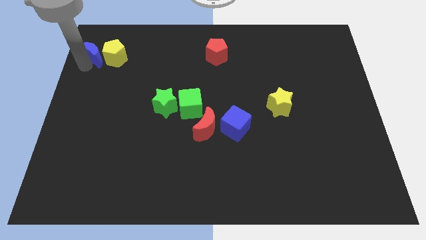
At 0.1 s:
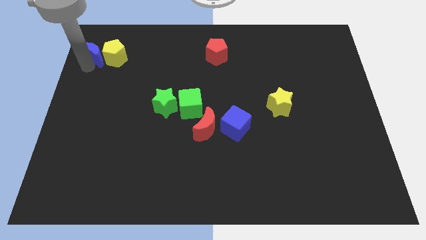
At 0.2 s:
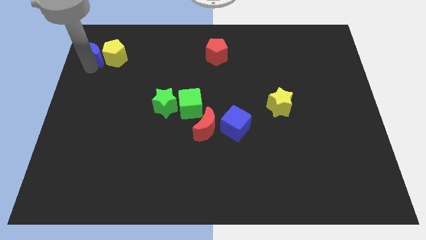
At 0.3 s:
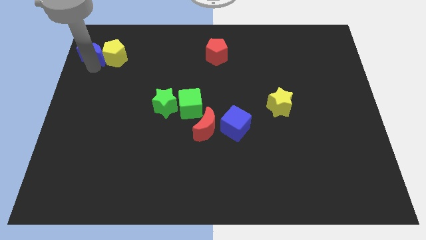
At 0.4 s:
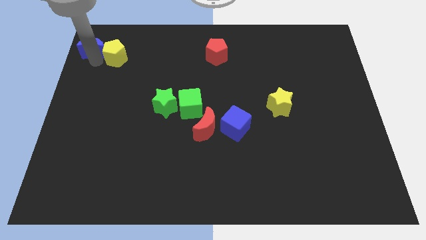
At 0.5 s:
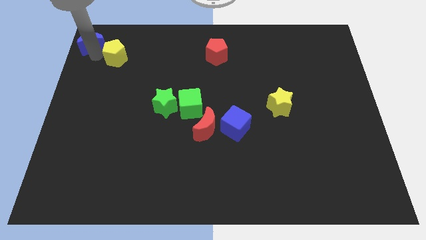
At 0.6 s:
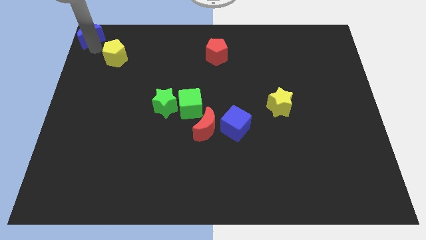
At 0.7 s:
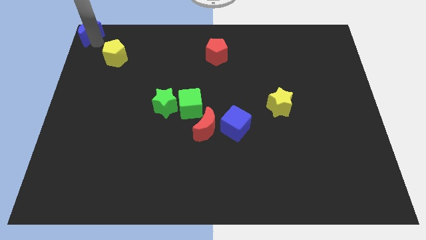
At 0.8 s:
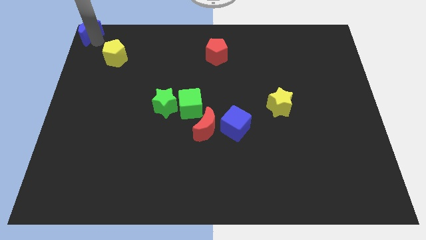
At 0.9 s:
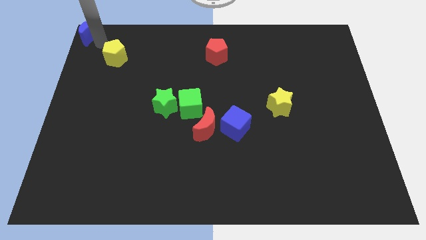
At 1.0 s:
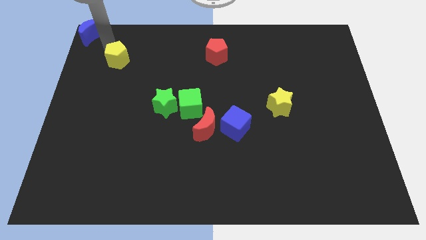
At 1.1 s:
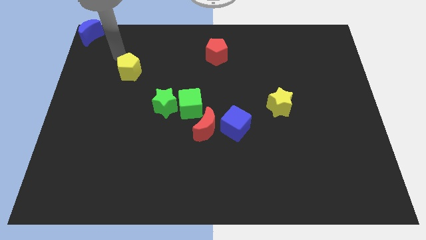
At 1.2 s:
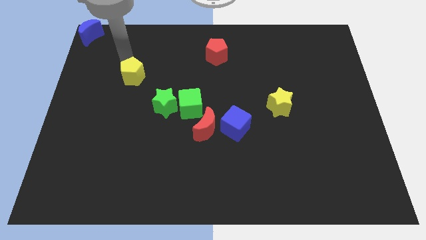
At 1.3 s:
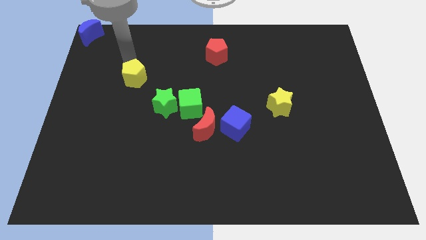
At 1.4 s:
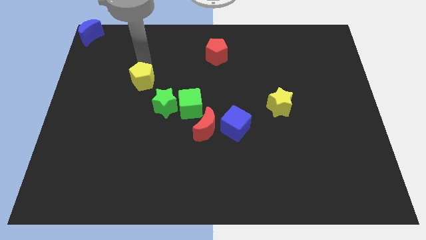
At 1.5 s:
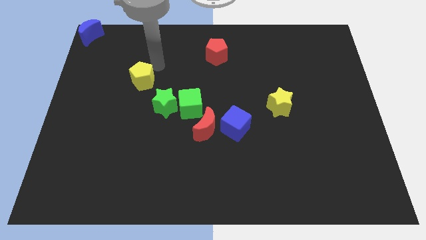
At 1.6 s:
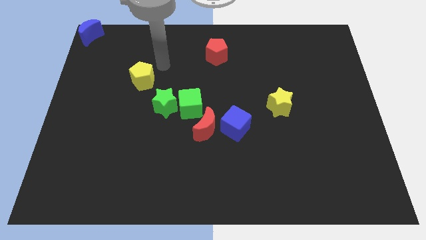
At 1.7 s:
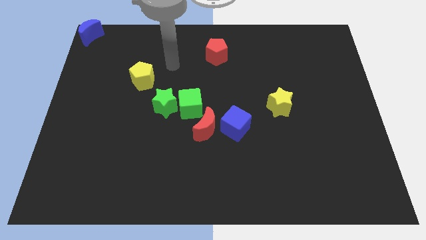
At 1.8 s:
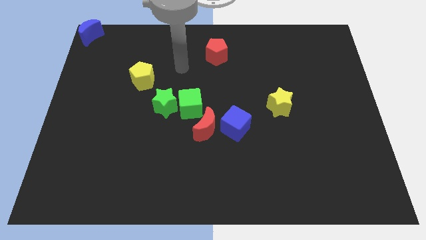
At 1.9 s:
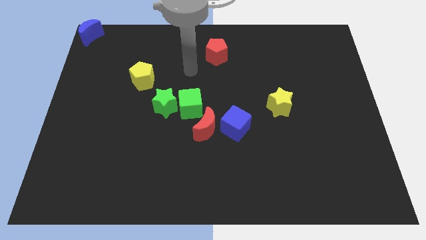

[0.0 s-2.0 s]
move the blue moon to the top left corner

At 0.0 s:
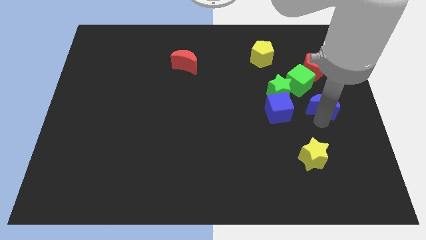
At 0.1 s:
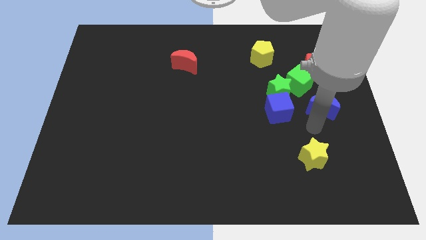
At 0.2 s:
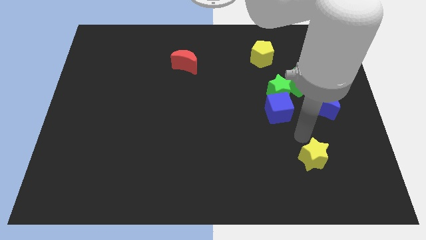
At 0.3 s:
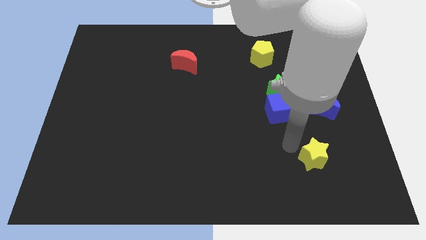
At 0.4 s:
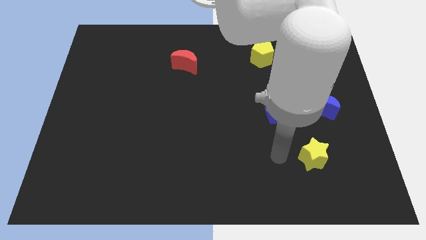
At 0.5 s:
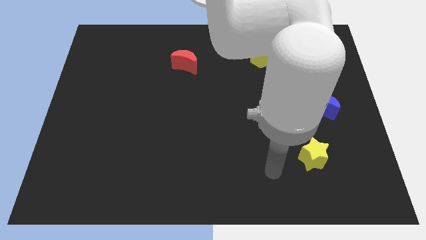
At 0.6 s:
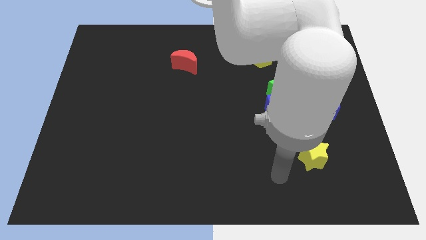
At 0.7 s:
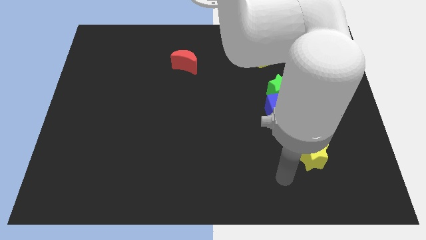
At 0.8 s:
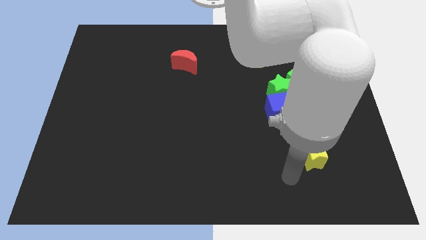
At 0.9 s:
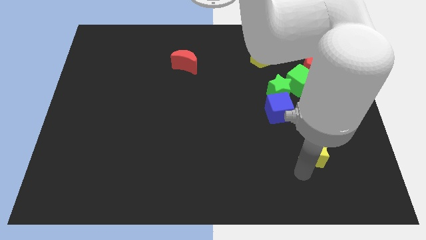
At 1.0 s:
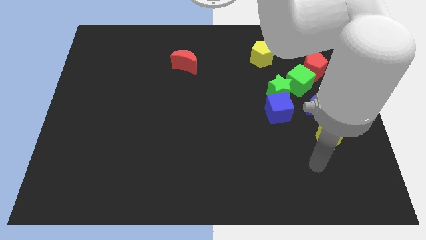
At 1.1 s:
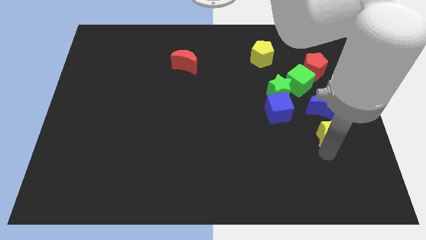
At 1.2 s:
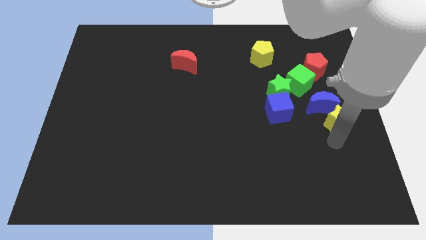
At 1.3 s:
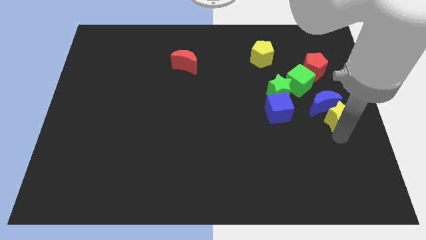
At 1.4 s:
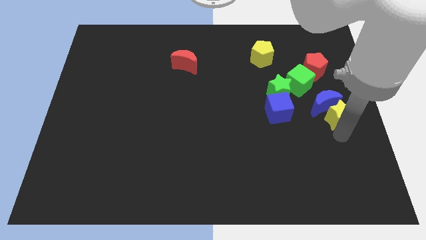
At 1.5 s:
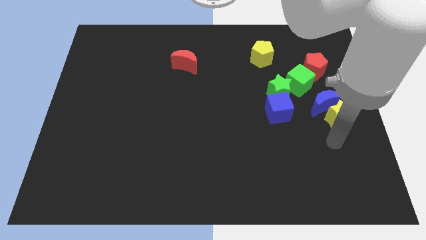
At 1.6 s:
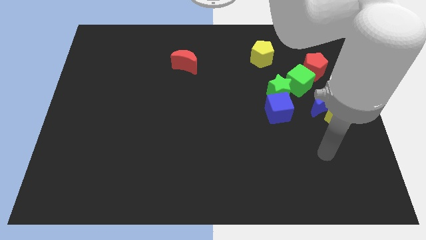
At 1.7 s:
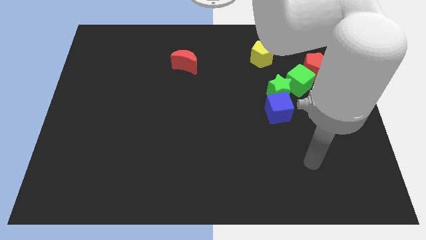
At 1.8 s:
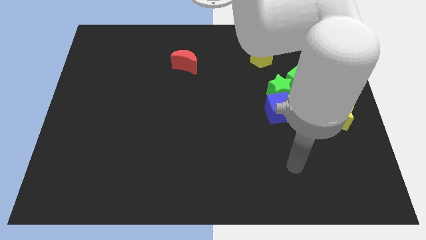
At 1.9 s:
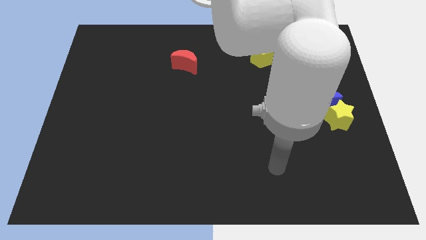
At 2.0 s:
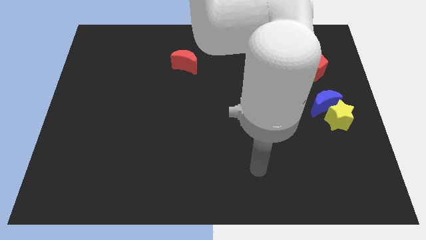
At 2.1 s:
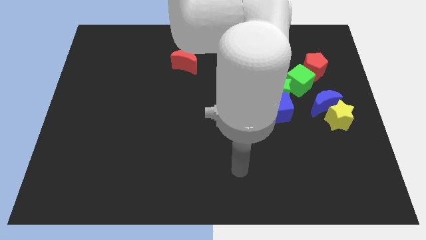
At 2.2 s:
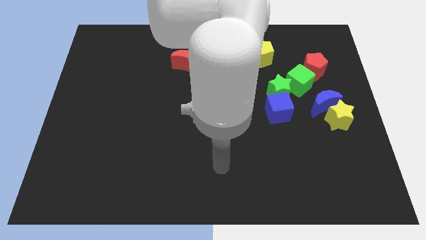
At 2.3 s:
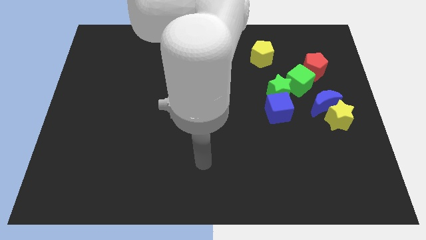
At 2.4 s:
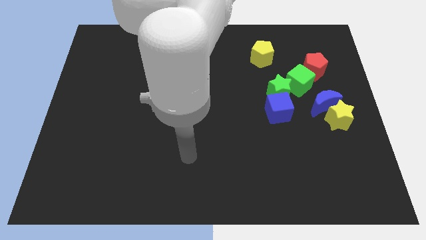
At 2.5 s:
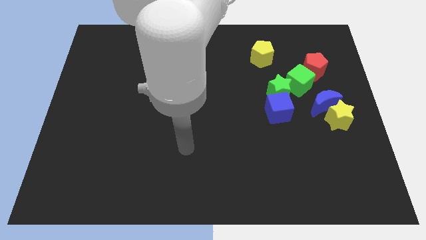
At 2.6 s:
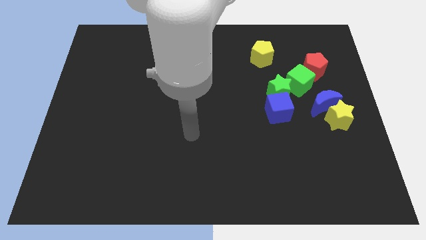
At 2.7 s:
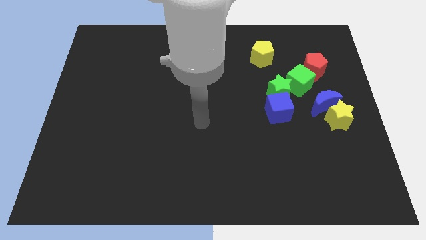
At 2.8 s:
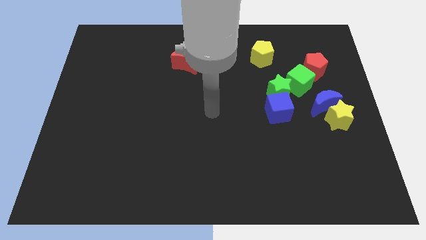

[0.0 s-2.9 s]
push the yellow star towards the blue moon and move away

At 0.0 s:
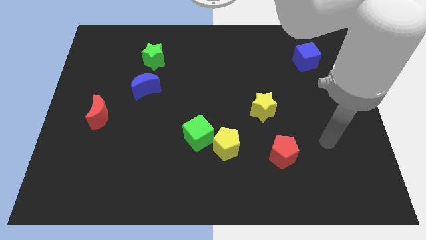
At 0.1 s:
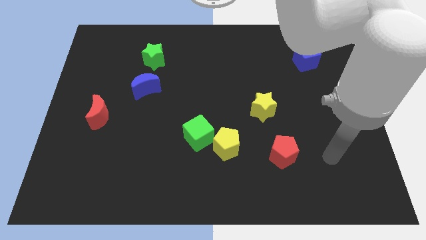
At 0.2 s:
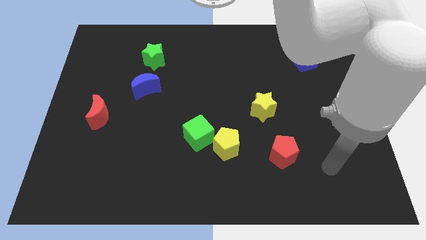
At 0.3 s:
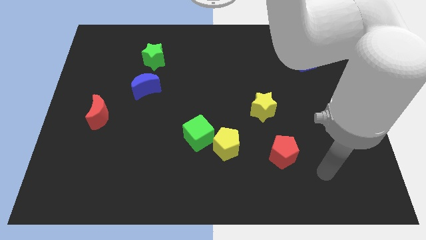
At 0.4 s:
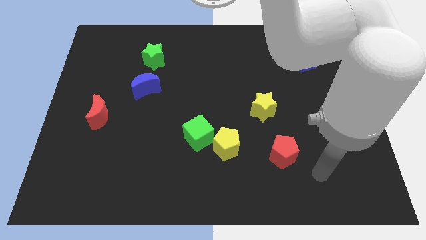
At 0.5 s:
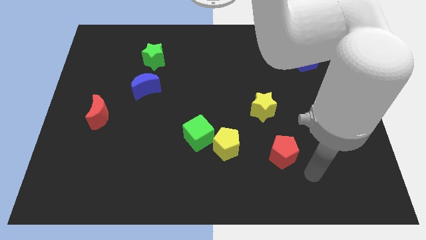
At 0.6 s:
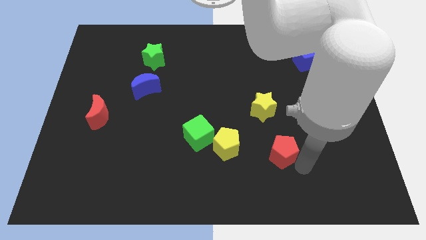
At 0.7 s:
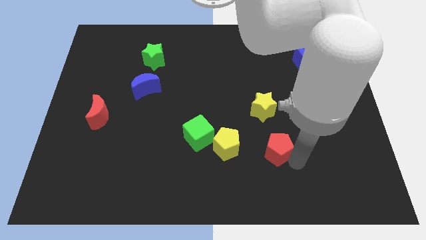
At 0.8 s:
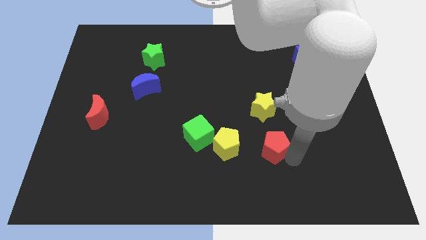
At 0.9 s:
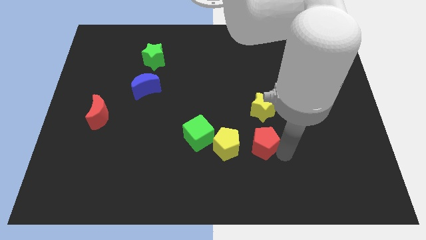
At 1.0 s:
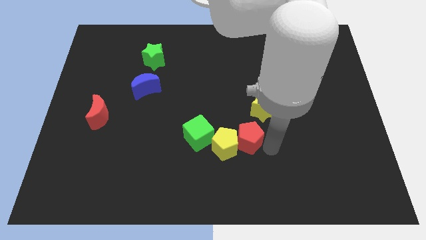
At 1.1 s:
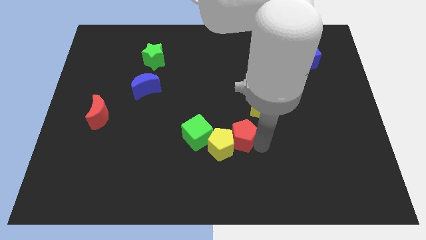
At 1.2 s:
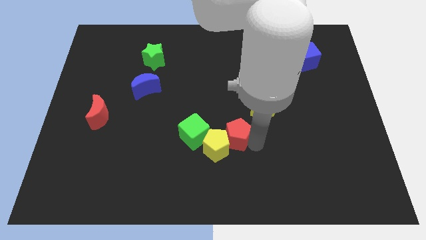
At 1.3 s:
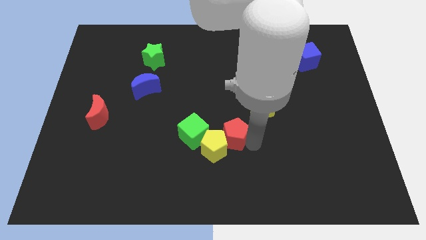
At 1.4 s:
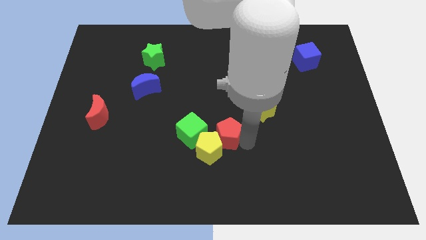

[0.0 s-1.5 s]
push the red pentagon into the yellow pentagon

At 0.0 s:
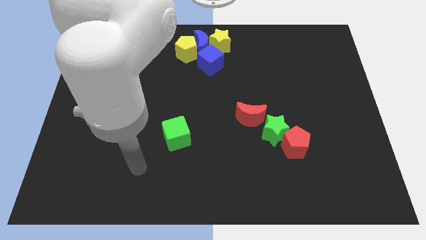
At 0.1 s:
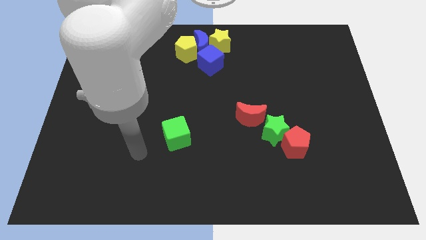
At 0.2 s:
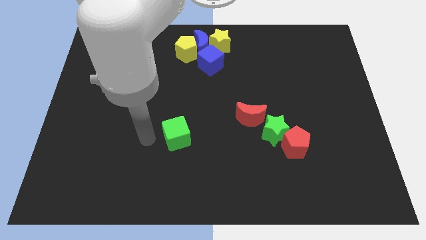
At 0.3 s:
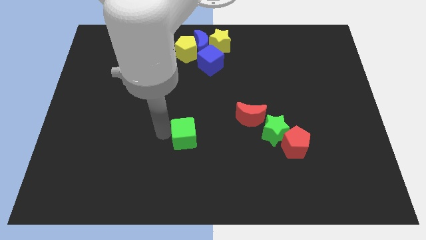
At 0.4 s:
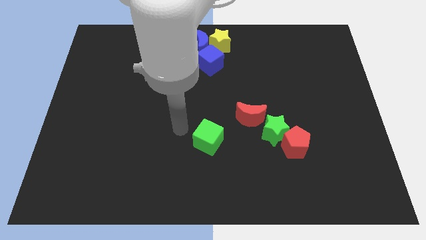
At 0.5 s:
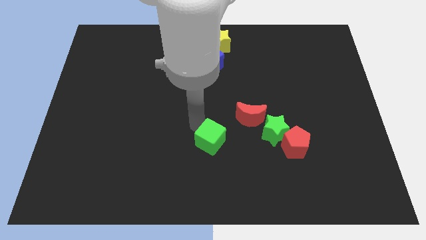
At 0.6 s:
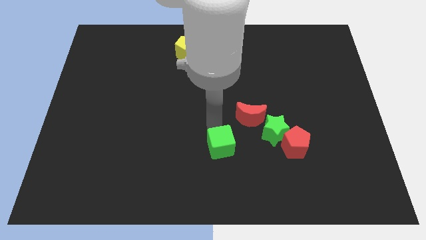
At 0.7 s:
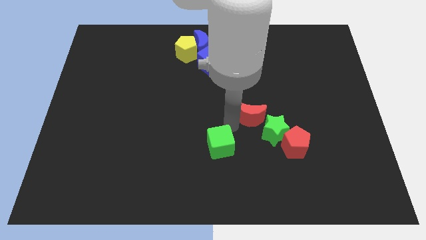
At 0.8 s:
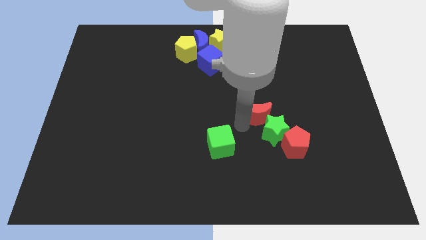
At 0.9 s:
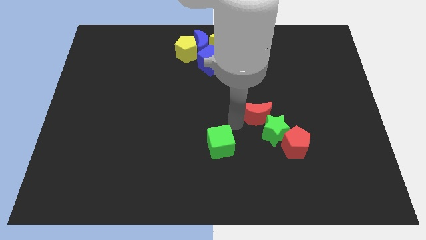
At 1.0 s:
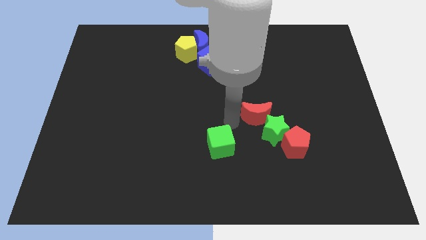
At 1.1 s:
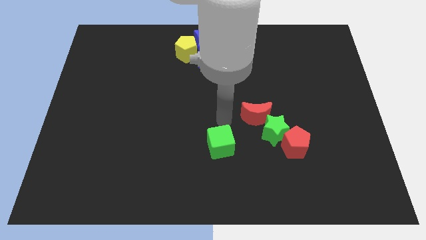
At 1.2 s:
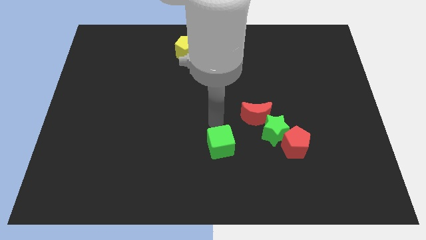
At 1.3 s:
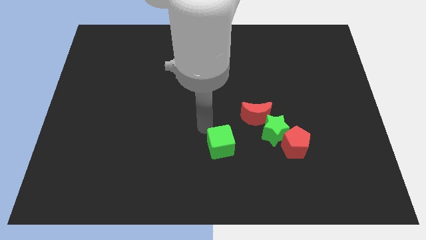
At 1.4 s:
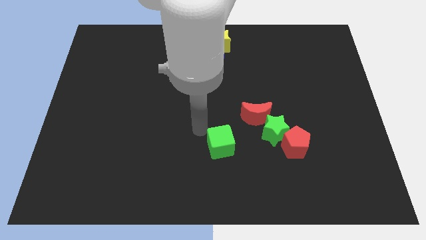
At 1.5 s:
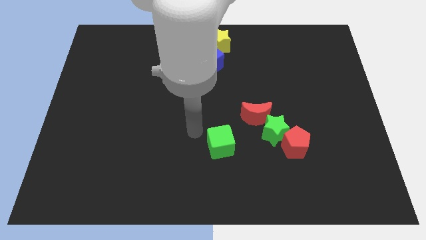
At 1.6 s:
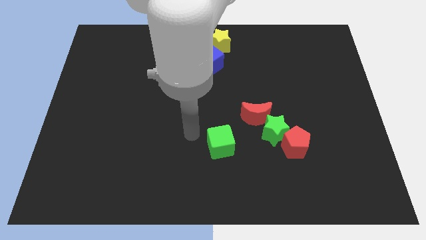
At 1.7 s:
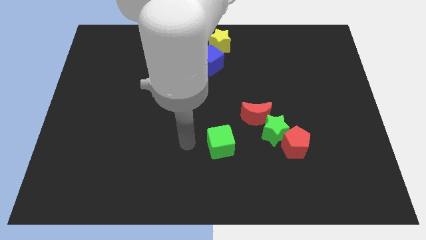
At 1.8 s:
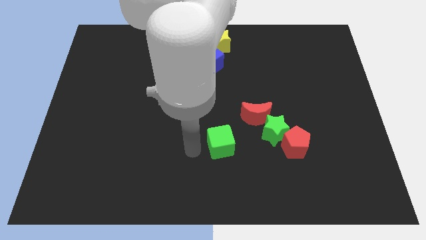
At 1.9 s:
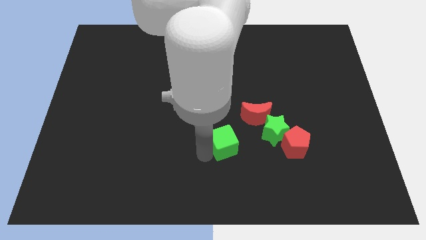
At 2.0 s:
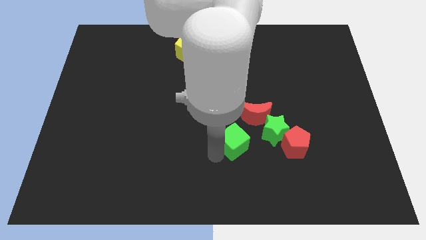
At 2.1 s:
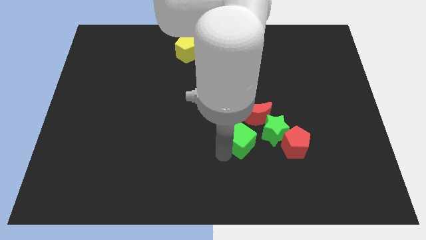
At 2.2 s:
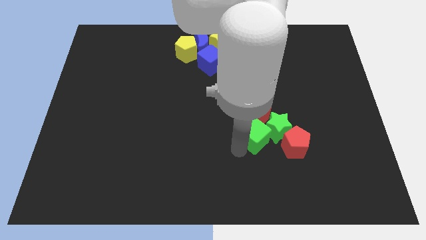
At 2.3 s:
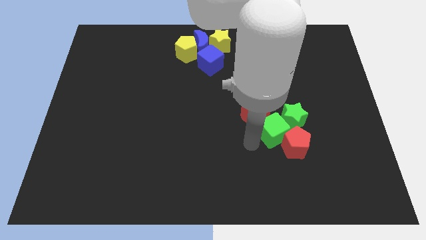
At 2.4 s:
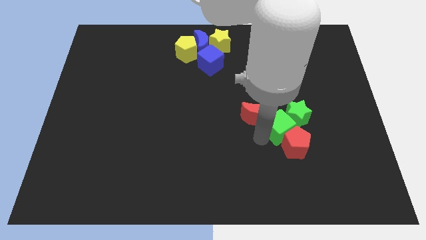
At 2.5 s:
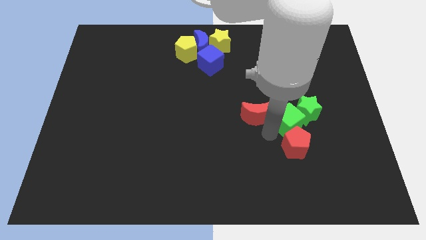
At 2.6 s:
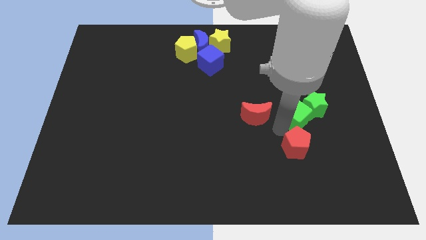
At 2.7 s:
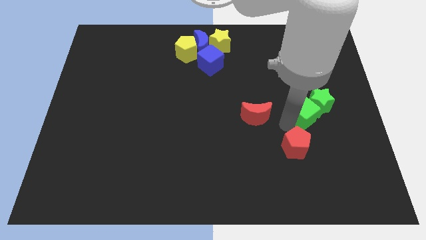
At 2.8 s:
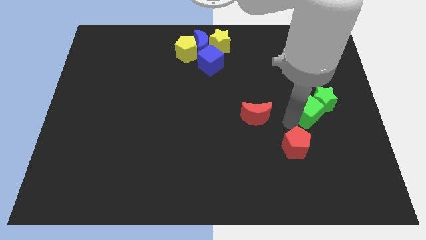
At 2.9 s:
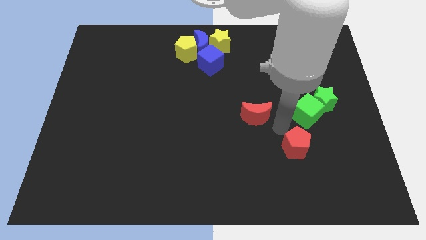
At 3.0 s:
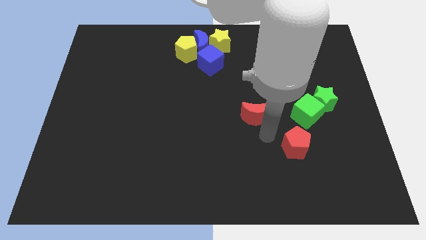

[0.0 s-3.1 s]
push the green cube into the green star
